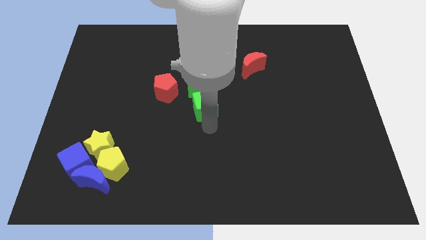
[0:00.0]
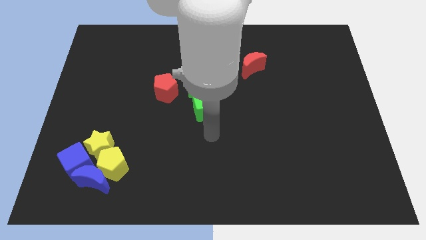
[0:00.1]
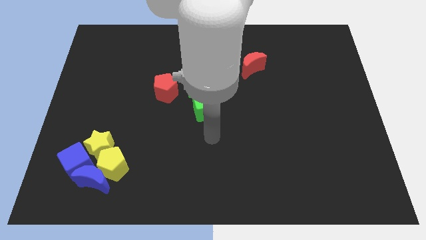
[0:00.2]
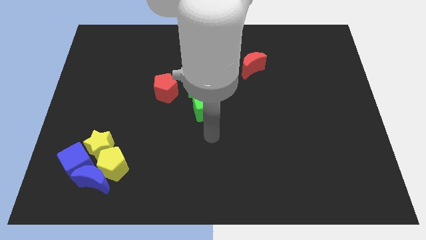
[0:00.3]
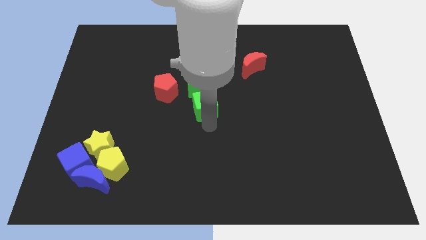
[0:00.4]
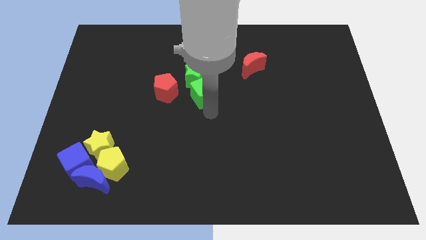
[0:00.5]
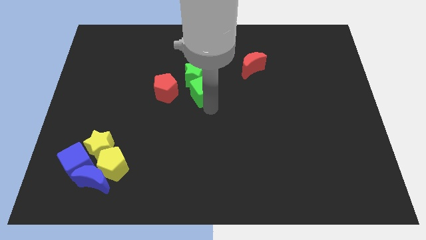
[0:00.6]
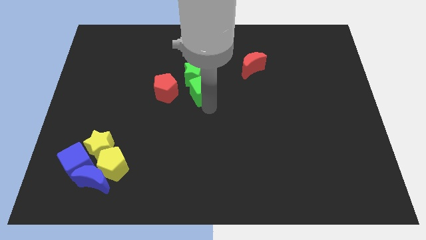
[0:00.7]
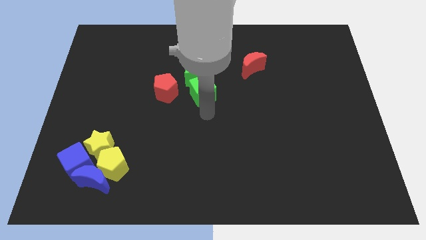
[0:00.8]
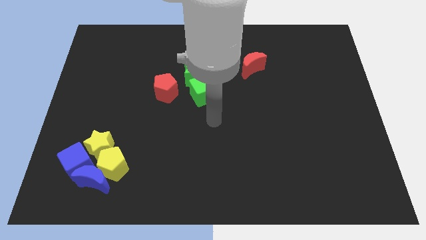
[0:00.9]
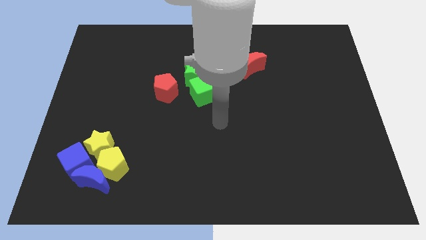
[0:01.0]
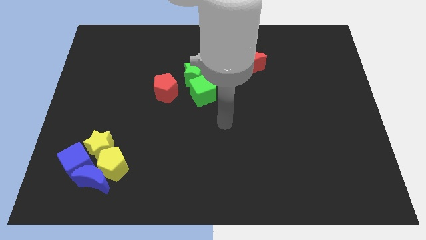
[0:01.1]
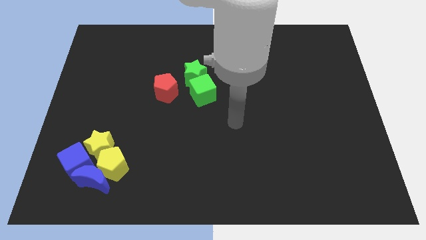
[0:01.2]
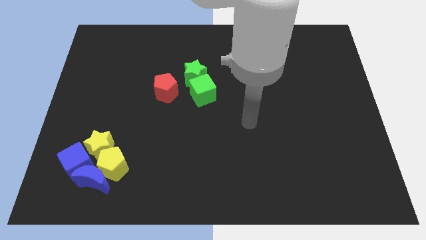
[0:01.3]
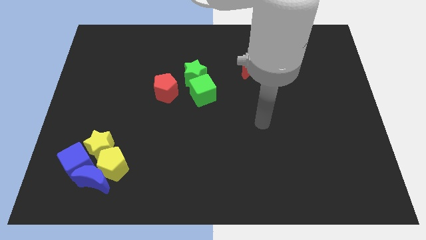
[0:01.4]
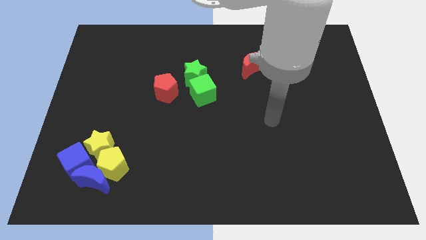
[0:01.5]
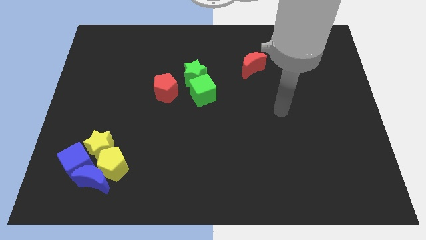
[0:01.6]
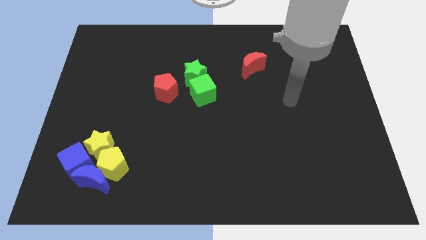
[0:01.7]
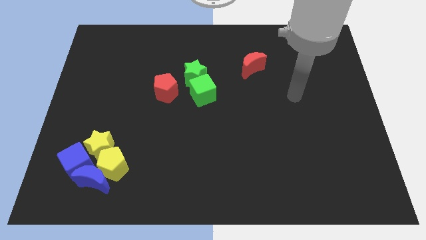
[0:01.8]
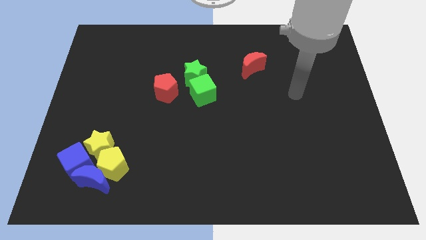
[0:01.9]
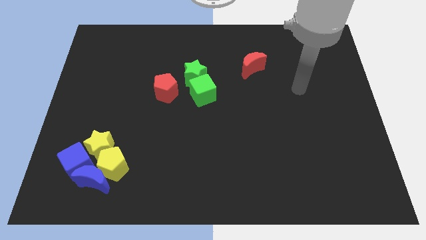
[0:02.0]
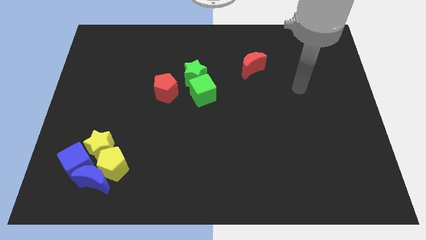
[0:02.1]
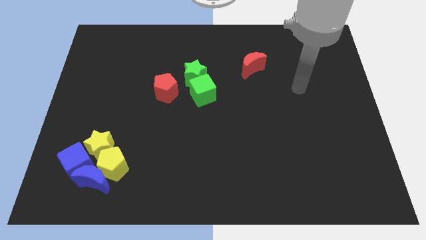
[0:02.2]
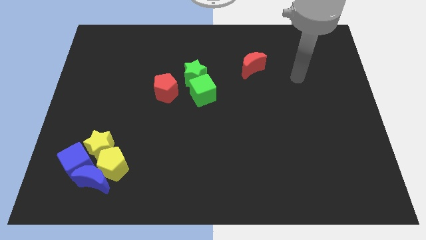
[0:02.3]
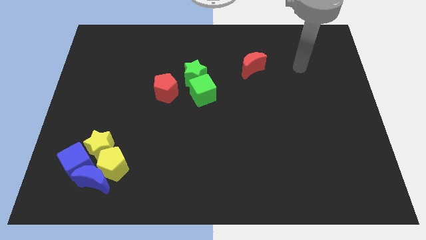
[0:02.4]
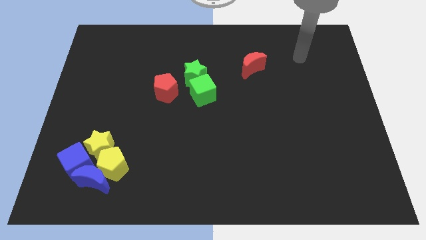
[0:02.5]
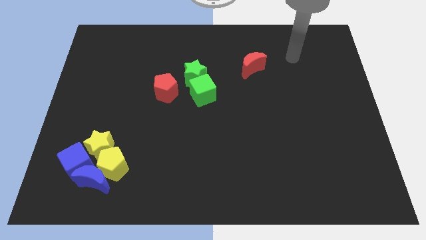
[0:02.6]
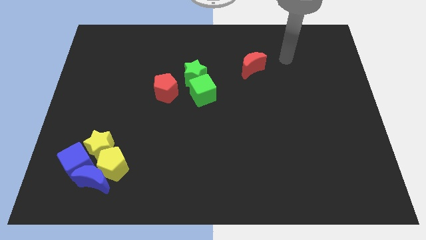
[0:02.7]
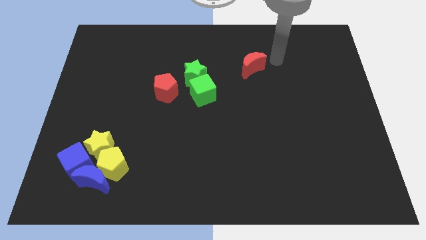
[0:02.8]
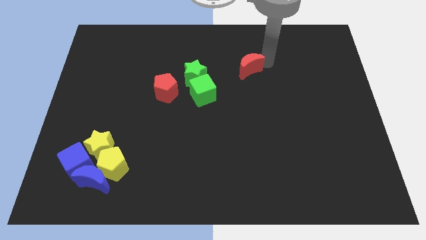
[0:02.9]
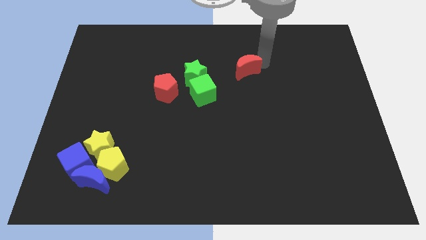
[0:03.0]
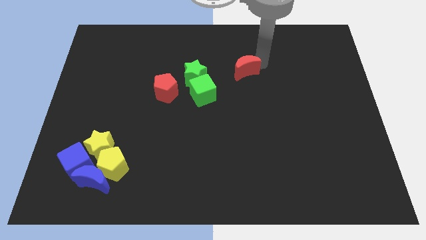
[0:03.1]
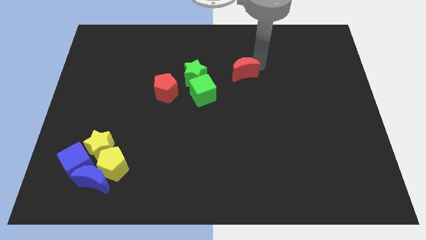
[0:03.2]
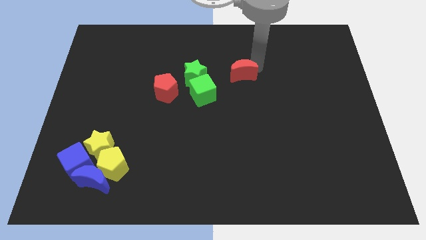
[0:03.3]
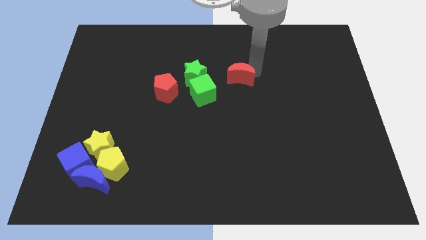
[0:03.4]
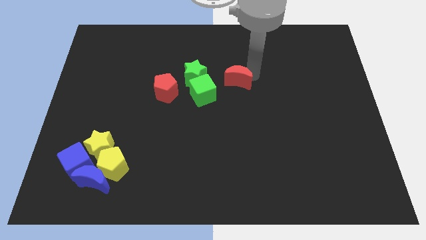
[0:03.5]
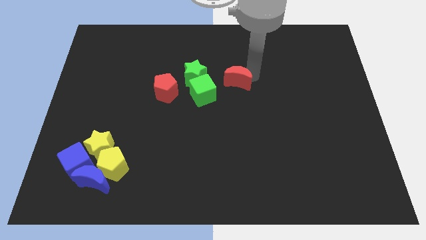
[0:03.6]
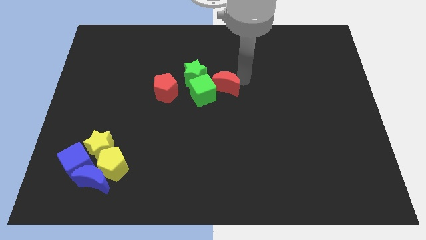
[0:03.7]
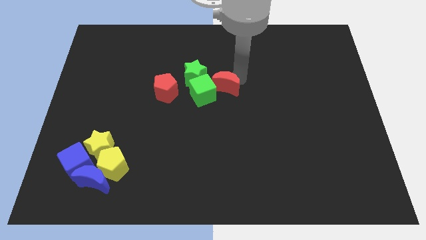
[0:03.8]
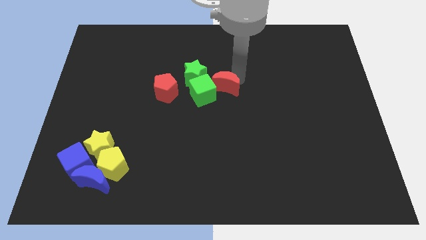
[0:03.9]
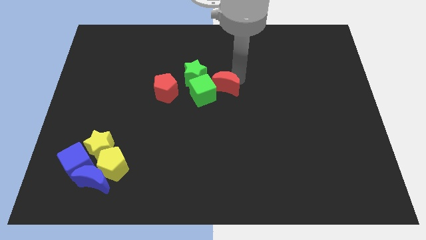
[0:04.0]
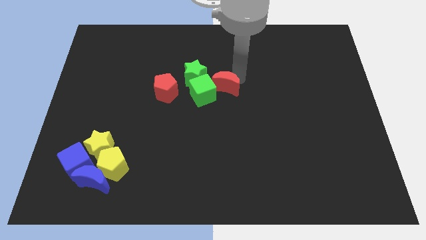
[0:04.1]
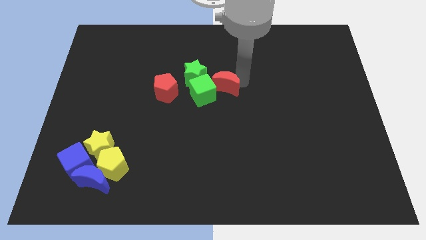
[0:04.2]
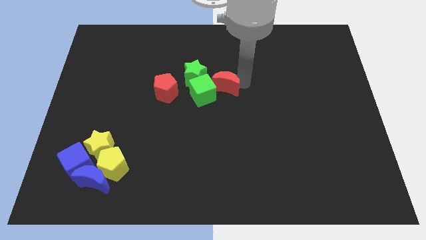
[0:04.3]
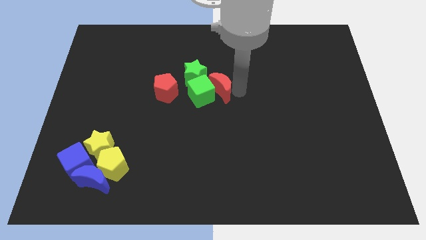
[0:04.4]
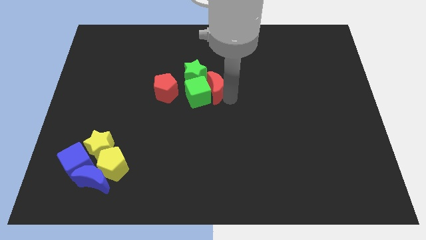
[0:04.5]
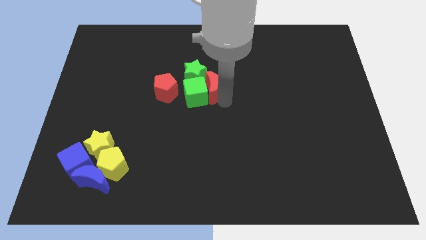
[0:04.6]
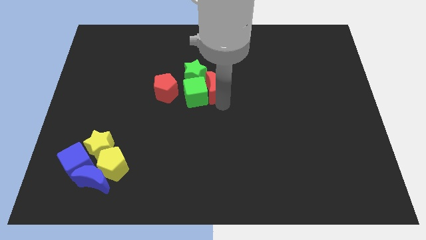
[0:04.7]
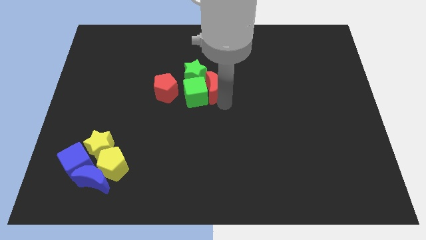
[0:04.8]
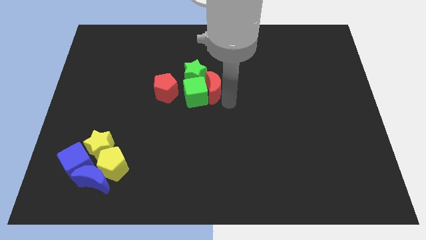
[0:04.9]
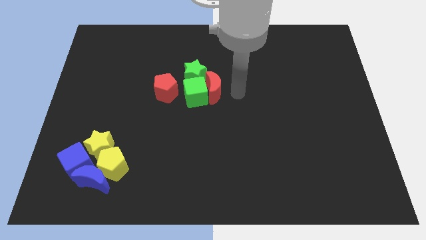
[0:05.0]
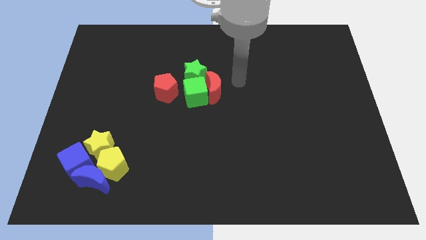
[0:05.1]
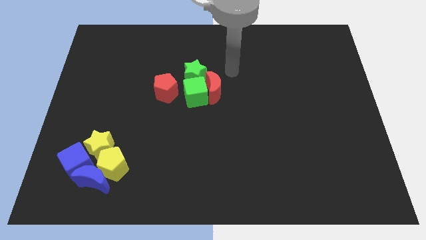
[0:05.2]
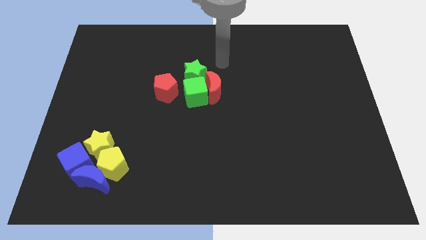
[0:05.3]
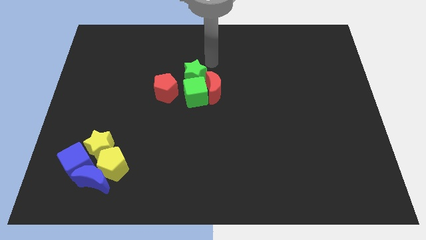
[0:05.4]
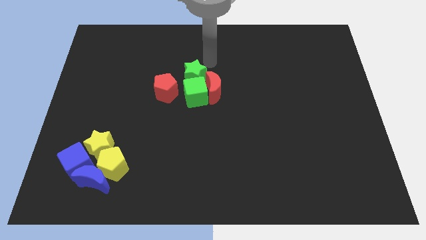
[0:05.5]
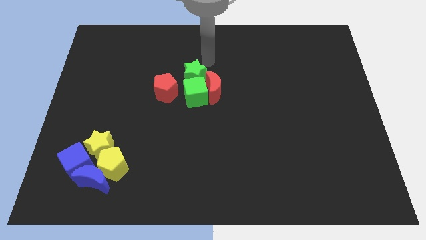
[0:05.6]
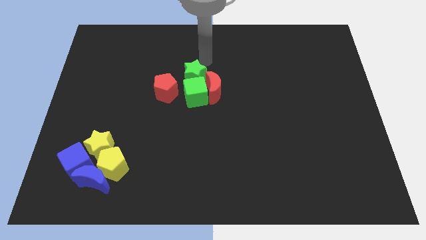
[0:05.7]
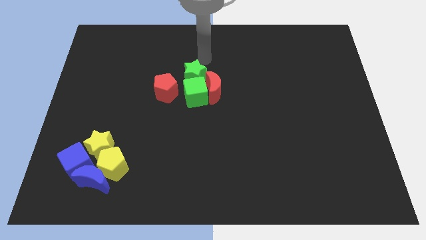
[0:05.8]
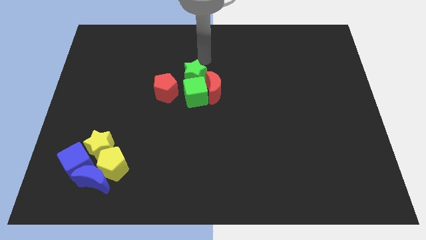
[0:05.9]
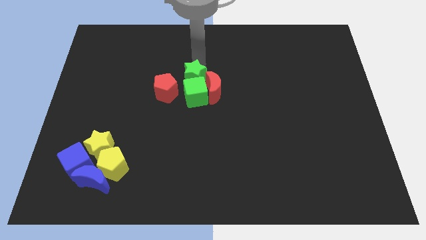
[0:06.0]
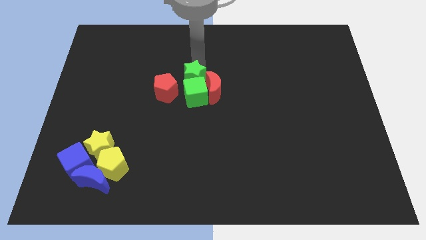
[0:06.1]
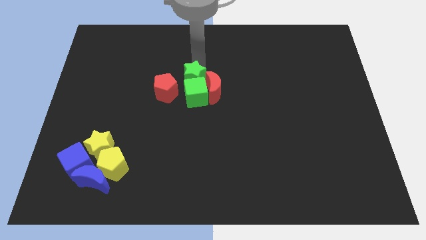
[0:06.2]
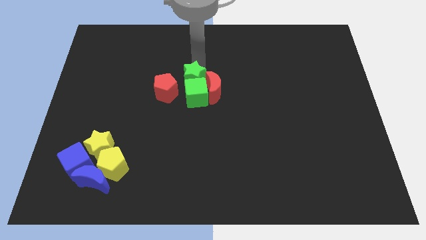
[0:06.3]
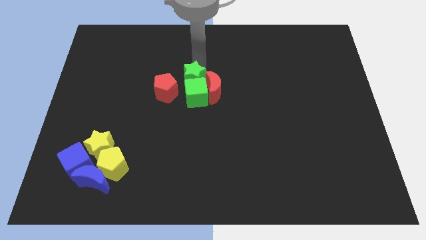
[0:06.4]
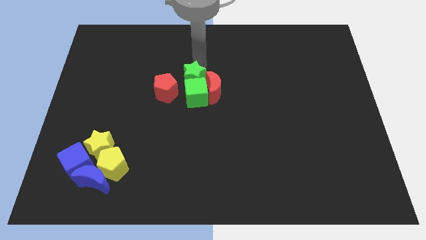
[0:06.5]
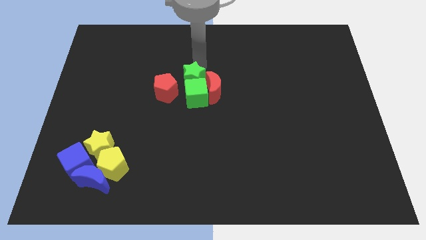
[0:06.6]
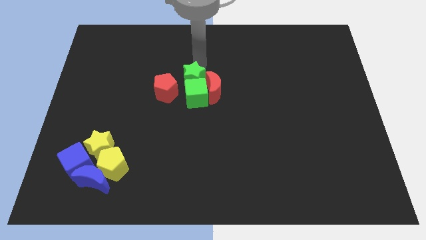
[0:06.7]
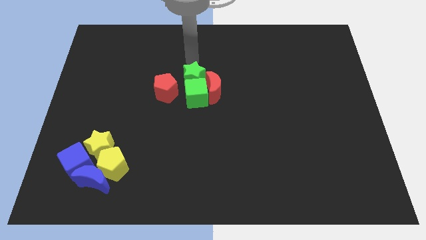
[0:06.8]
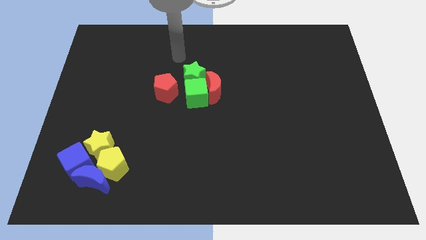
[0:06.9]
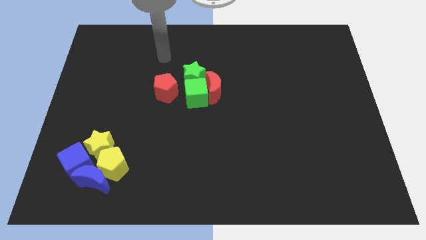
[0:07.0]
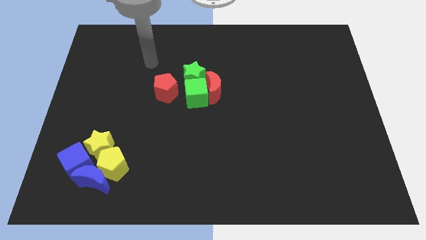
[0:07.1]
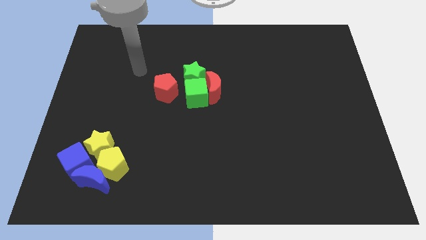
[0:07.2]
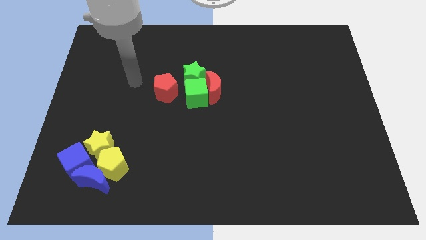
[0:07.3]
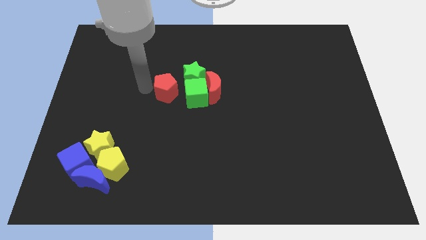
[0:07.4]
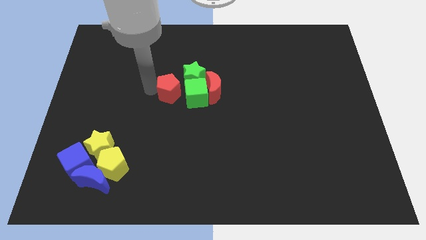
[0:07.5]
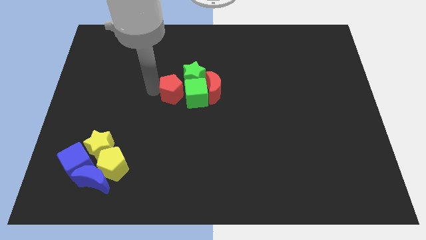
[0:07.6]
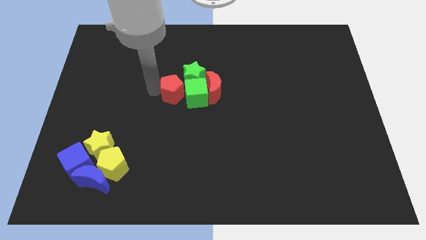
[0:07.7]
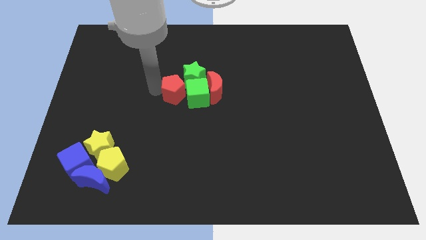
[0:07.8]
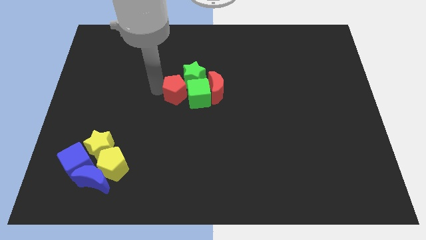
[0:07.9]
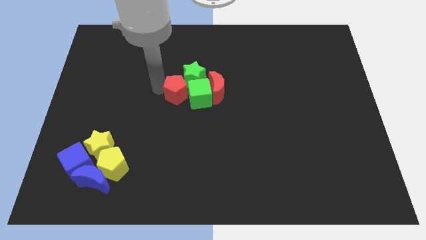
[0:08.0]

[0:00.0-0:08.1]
put the green blocks and red blocks together at the center of the table

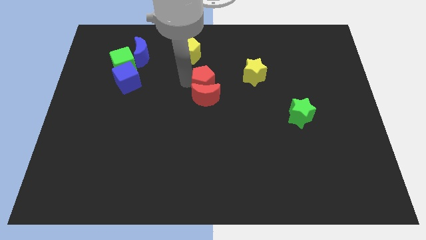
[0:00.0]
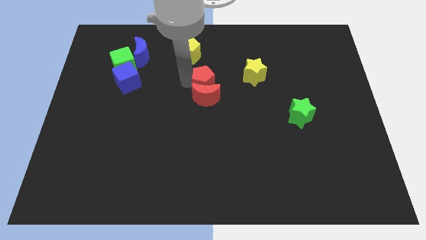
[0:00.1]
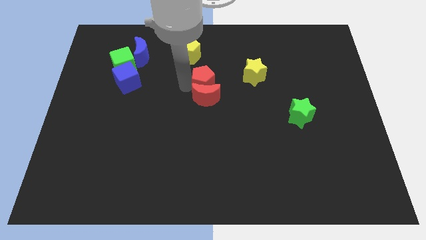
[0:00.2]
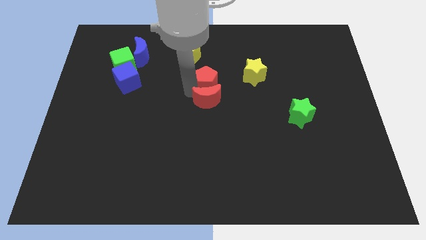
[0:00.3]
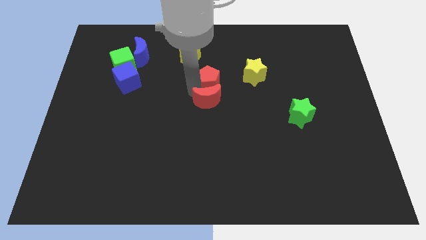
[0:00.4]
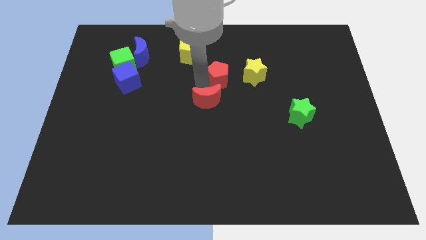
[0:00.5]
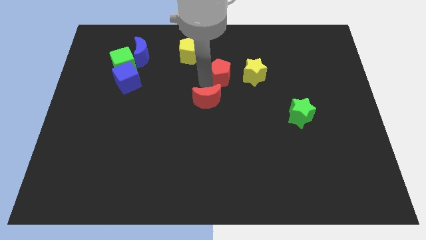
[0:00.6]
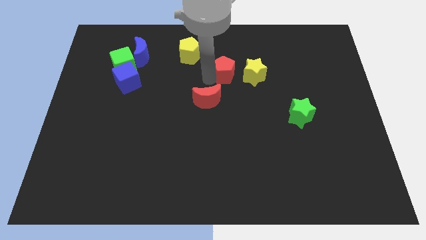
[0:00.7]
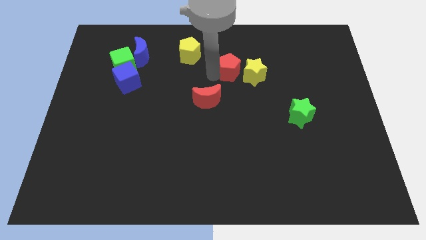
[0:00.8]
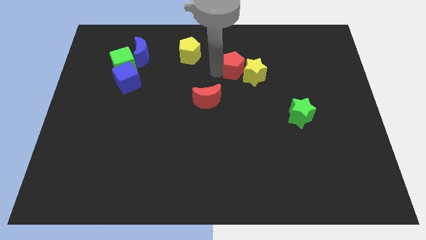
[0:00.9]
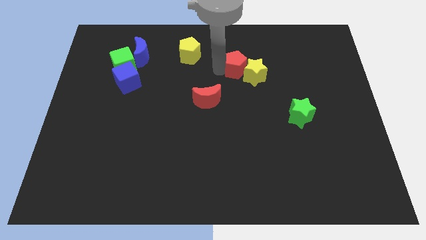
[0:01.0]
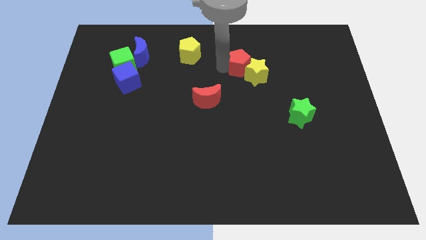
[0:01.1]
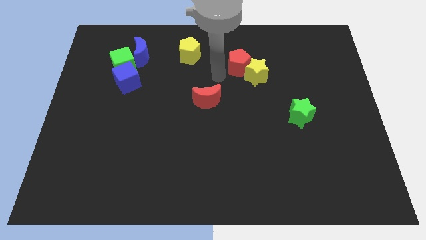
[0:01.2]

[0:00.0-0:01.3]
separate the red pentagon from red crescent
